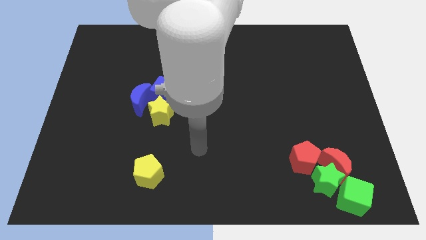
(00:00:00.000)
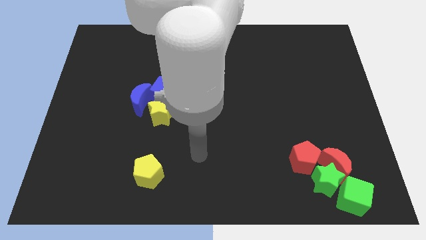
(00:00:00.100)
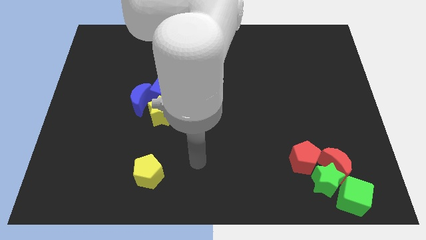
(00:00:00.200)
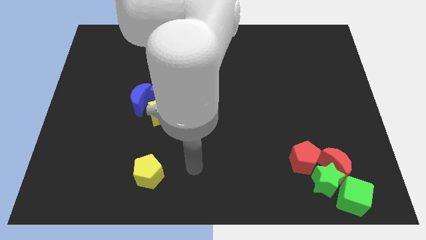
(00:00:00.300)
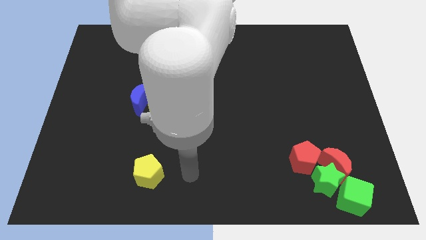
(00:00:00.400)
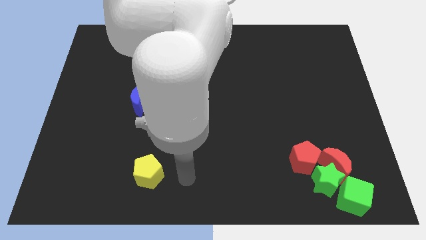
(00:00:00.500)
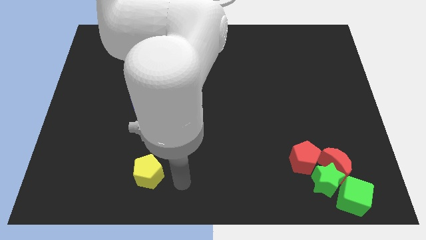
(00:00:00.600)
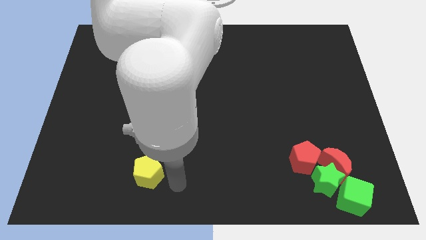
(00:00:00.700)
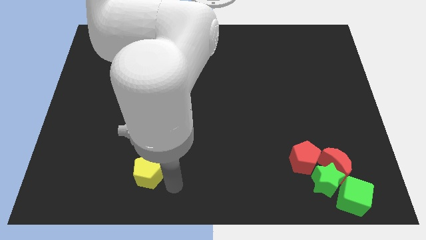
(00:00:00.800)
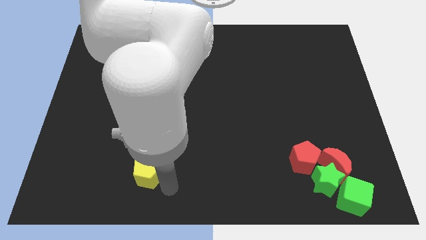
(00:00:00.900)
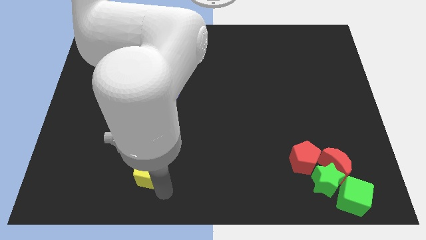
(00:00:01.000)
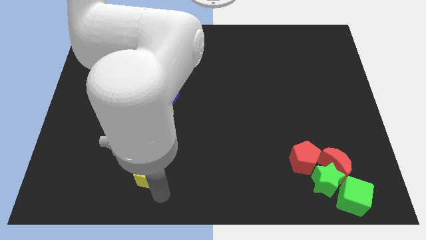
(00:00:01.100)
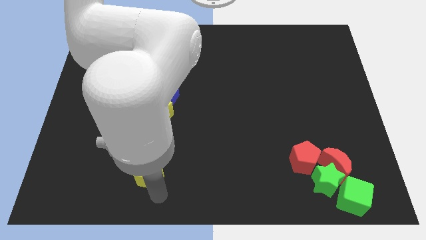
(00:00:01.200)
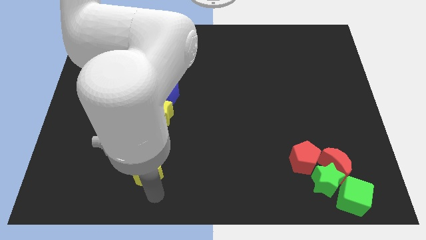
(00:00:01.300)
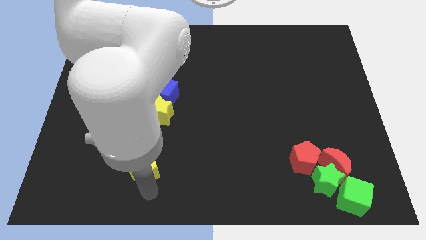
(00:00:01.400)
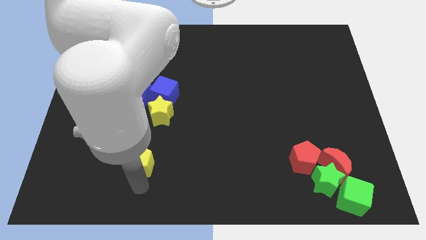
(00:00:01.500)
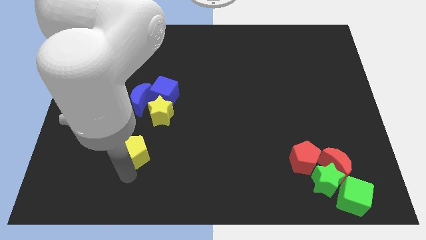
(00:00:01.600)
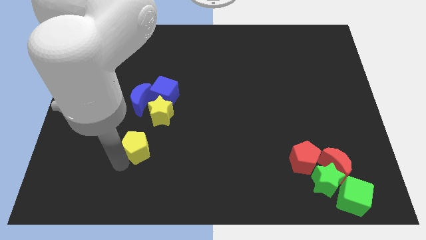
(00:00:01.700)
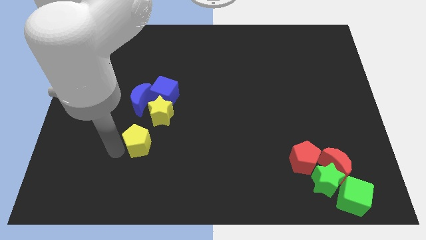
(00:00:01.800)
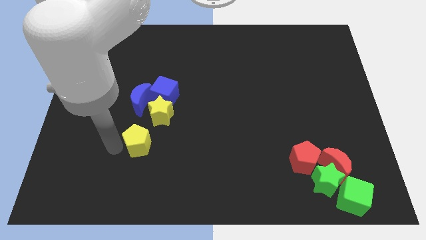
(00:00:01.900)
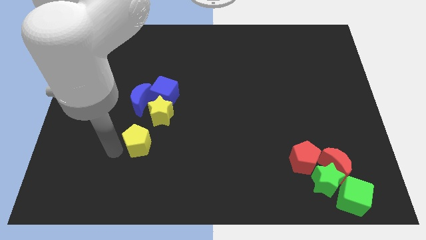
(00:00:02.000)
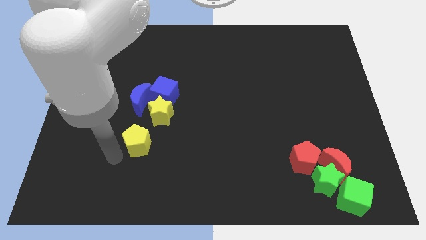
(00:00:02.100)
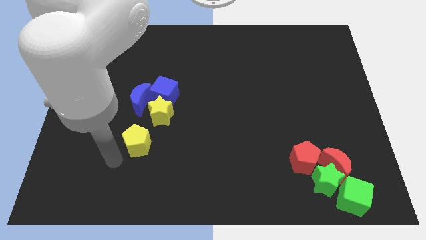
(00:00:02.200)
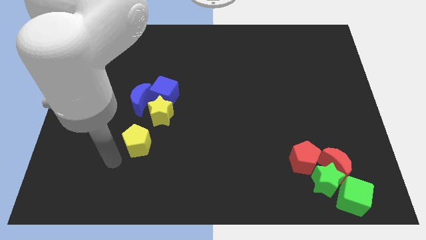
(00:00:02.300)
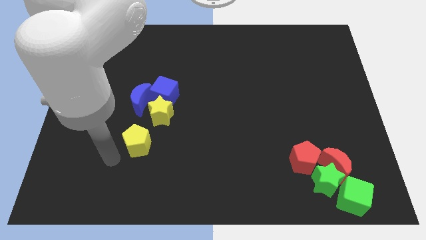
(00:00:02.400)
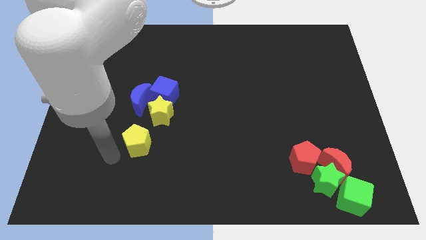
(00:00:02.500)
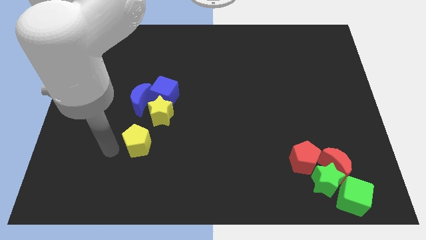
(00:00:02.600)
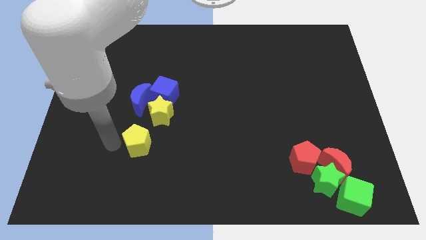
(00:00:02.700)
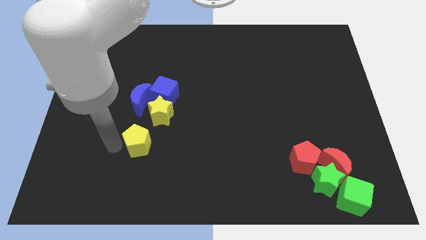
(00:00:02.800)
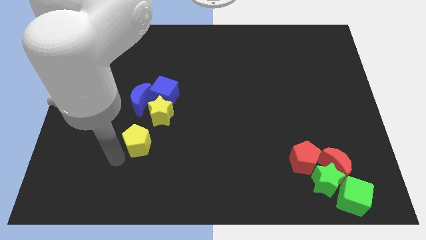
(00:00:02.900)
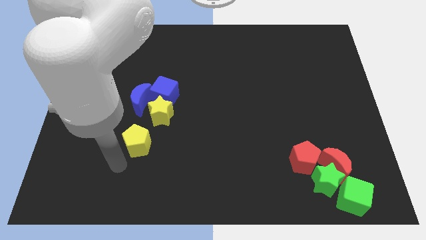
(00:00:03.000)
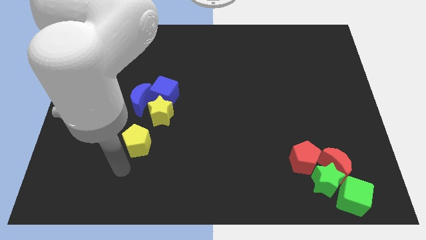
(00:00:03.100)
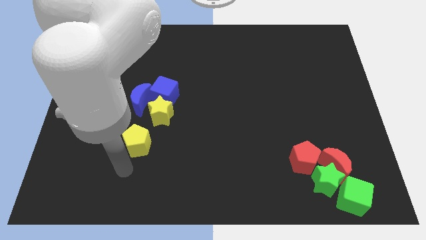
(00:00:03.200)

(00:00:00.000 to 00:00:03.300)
push the yellow pentagon towards the yellow star

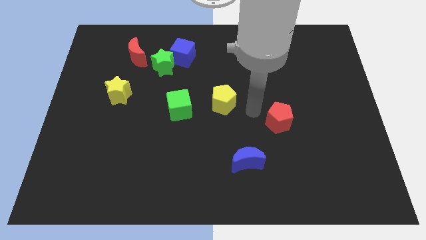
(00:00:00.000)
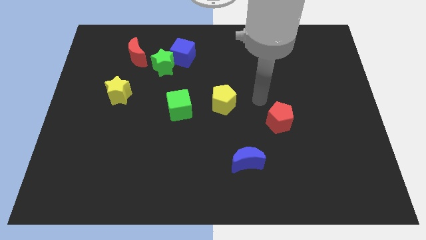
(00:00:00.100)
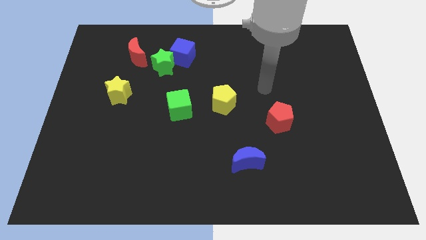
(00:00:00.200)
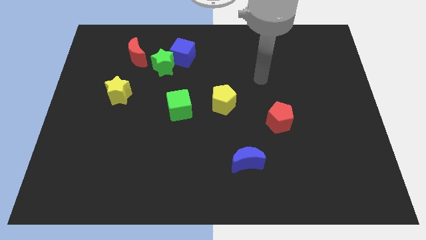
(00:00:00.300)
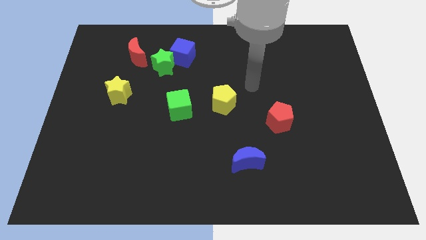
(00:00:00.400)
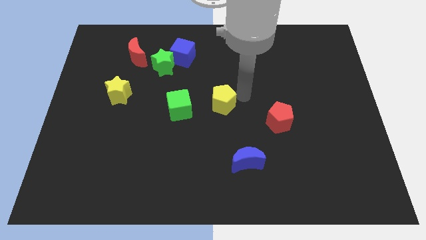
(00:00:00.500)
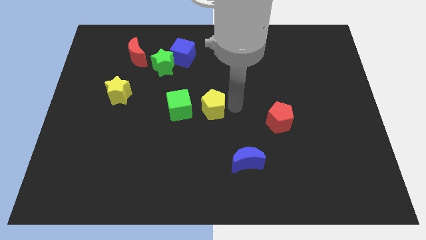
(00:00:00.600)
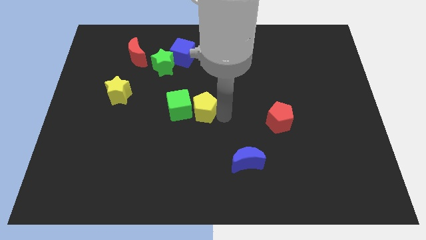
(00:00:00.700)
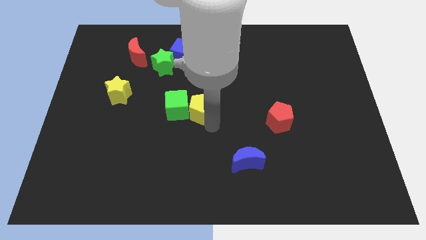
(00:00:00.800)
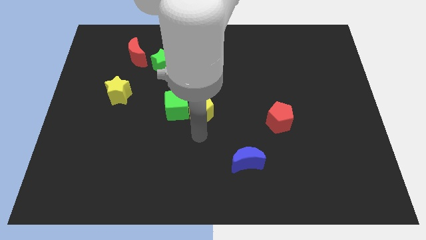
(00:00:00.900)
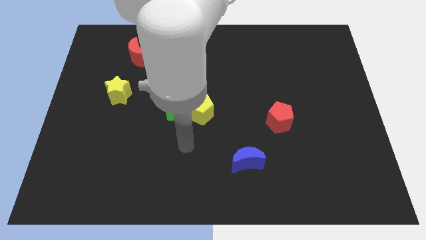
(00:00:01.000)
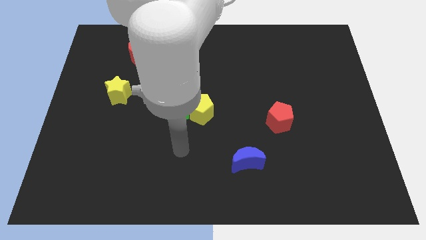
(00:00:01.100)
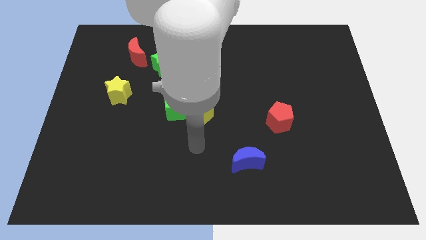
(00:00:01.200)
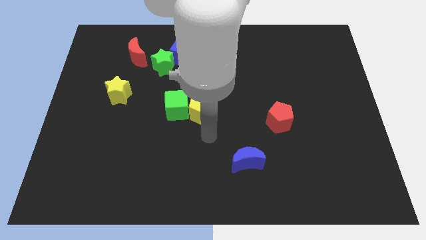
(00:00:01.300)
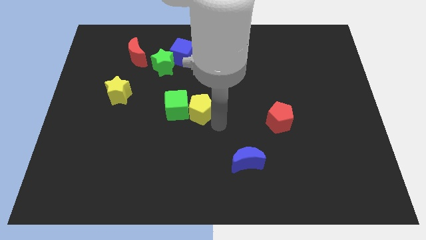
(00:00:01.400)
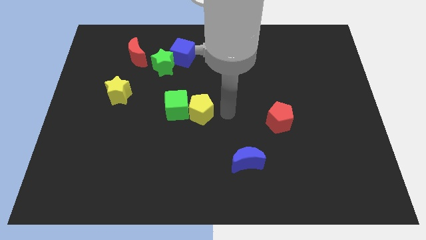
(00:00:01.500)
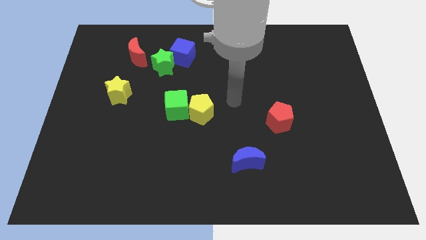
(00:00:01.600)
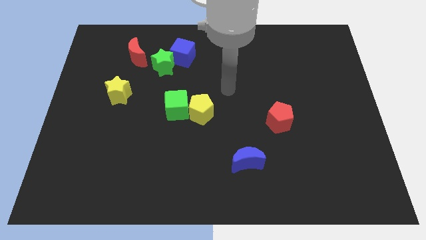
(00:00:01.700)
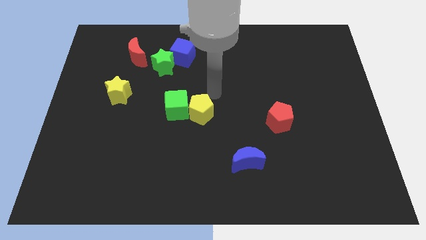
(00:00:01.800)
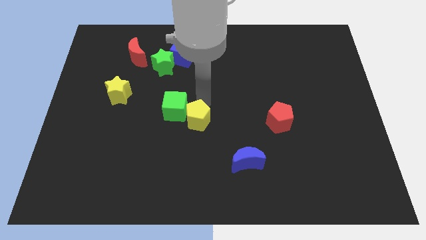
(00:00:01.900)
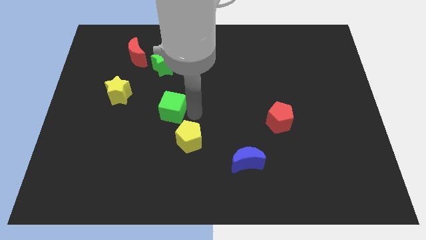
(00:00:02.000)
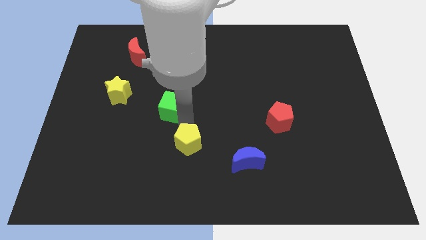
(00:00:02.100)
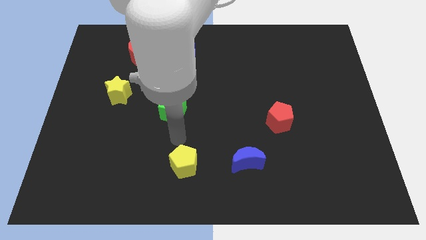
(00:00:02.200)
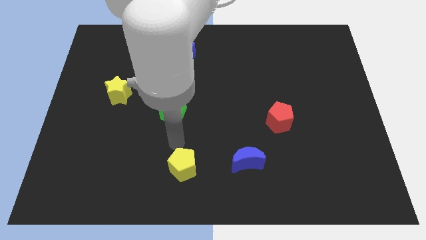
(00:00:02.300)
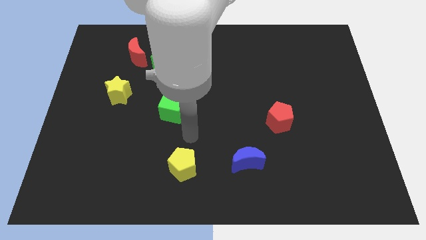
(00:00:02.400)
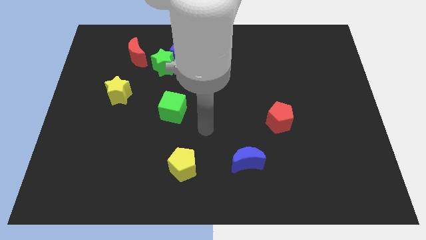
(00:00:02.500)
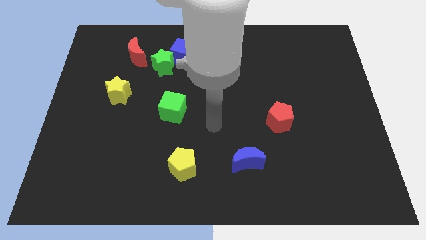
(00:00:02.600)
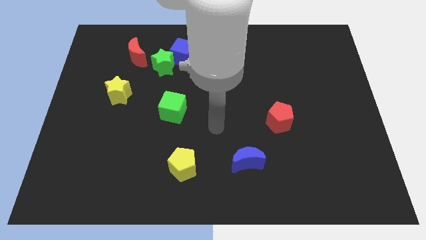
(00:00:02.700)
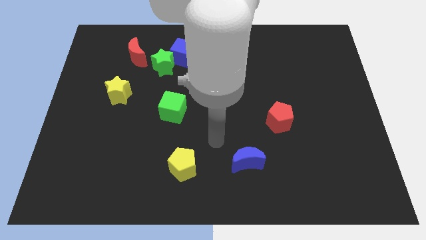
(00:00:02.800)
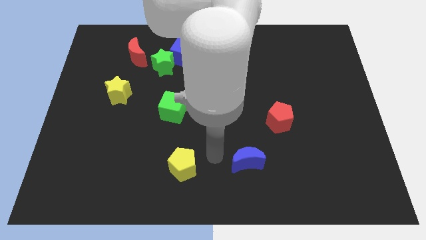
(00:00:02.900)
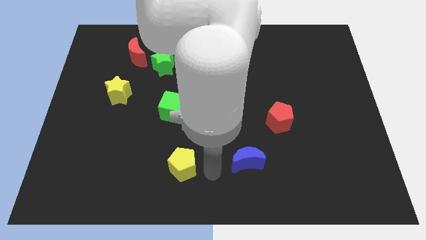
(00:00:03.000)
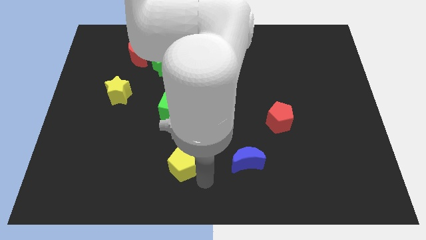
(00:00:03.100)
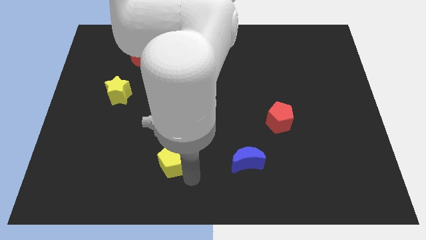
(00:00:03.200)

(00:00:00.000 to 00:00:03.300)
slide the yellow pentagon diagonally bottom right to the green cube

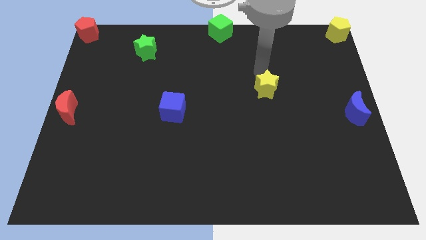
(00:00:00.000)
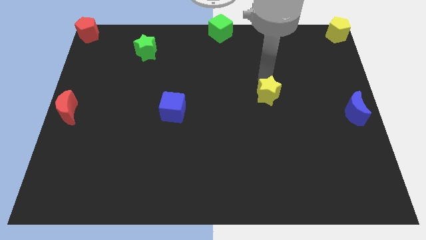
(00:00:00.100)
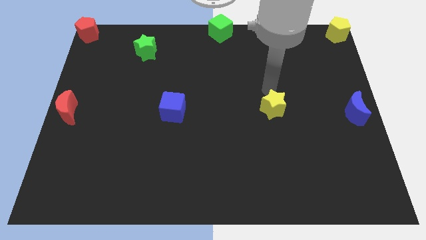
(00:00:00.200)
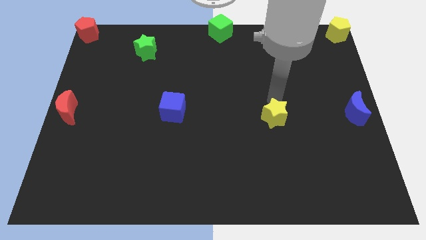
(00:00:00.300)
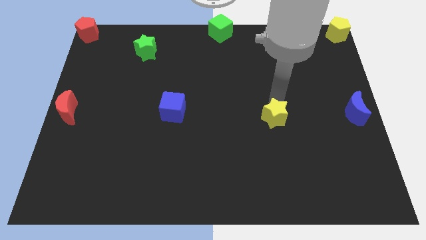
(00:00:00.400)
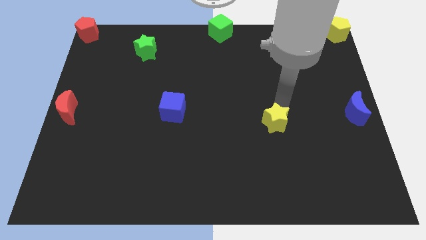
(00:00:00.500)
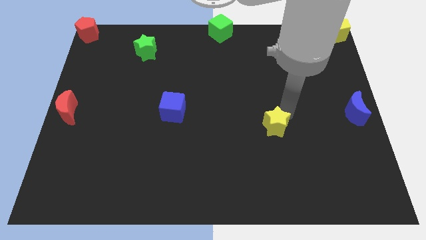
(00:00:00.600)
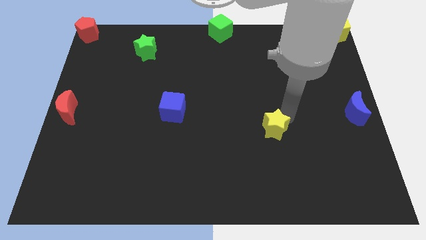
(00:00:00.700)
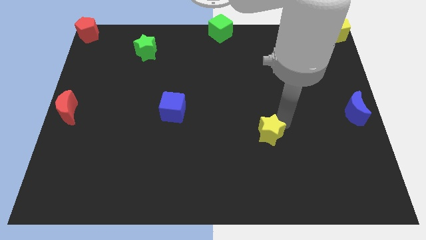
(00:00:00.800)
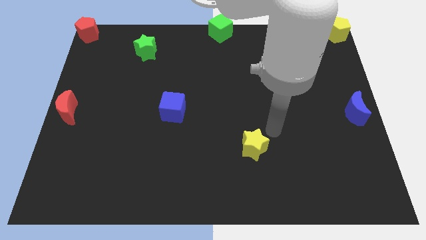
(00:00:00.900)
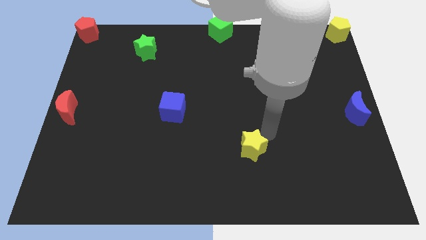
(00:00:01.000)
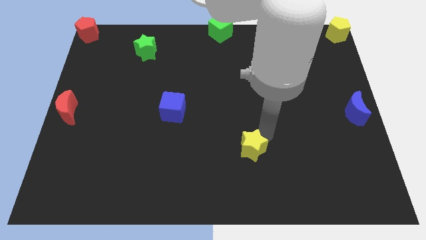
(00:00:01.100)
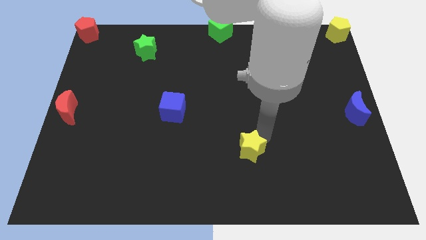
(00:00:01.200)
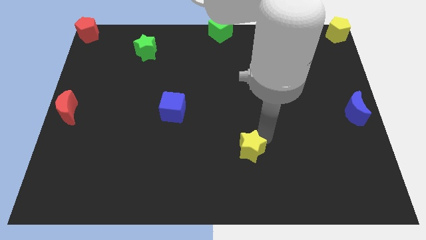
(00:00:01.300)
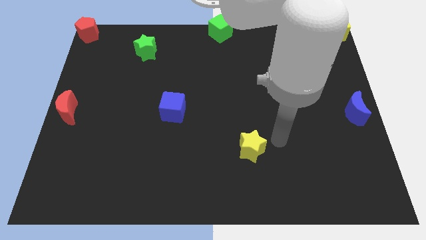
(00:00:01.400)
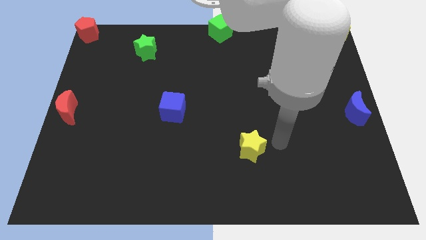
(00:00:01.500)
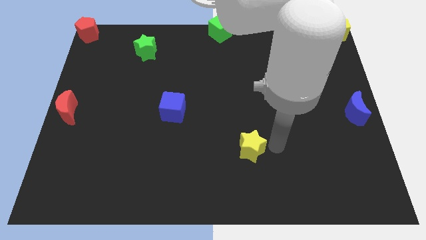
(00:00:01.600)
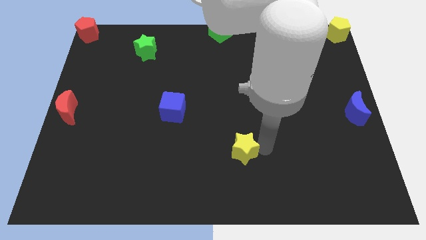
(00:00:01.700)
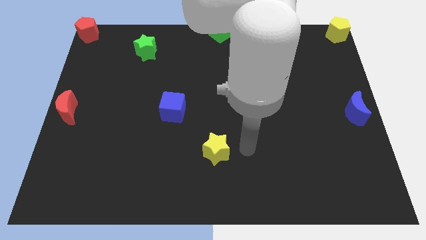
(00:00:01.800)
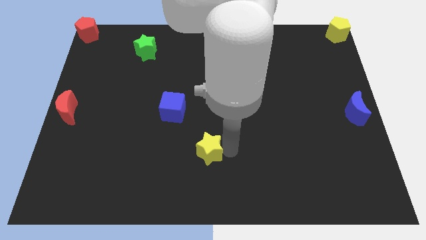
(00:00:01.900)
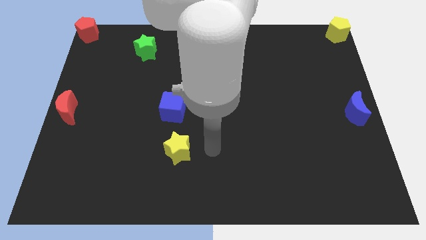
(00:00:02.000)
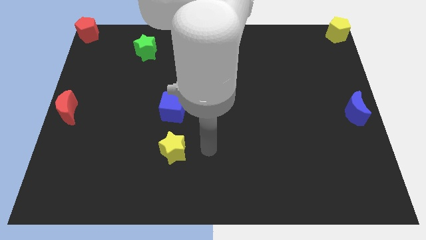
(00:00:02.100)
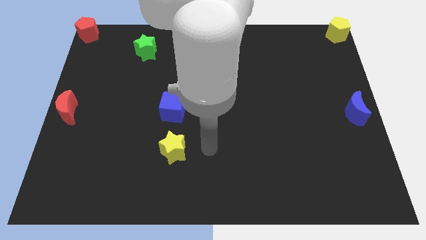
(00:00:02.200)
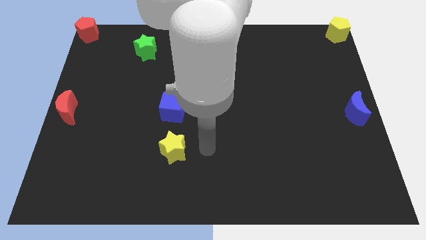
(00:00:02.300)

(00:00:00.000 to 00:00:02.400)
move yellow star towards the bottom left of the board
